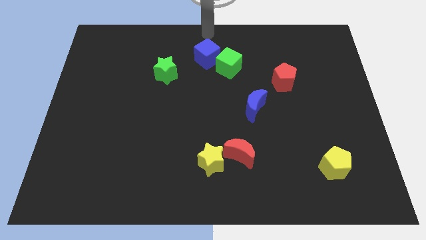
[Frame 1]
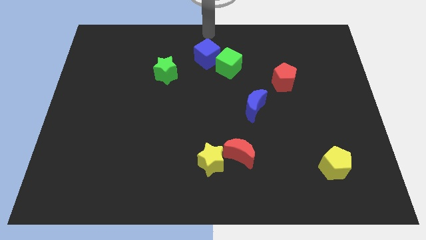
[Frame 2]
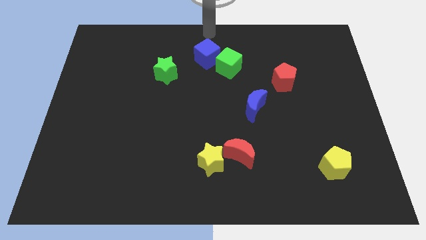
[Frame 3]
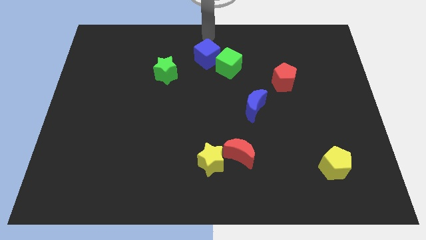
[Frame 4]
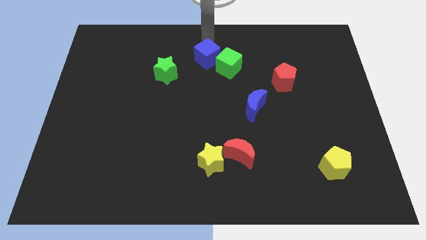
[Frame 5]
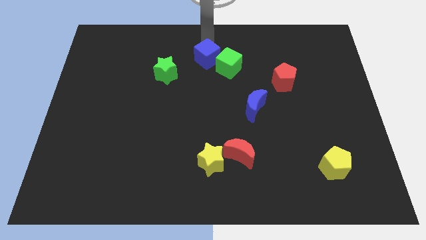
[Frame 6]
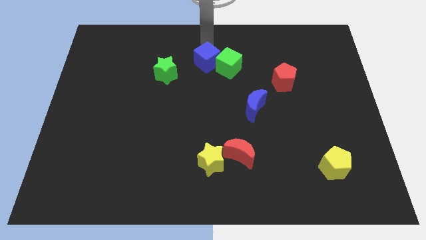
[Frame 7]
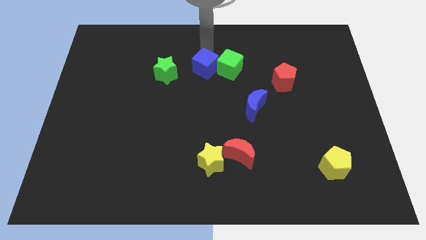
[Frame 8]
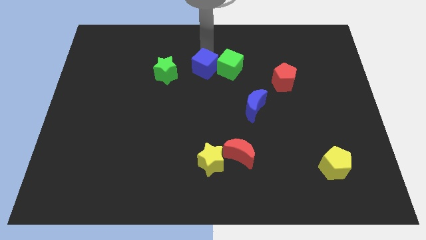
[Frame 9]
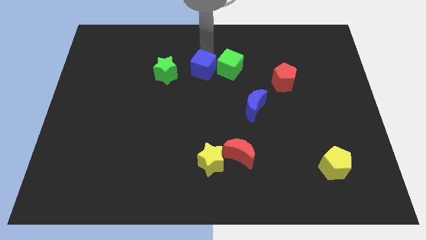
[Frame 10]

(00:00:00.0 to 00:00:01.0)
push blue cube slightly downwards

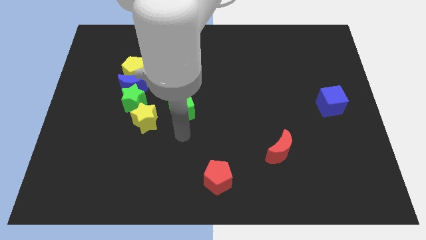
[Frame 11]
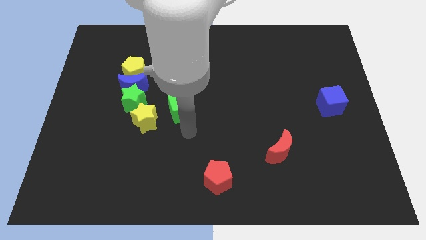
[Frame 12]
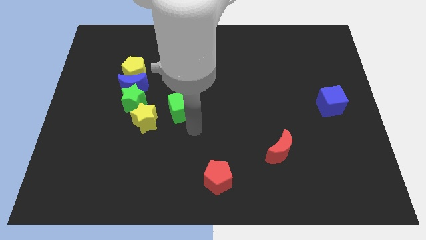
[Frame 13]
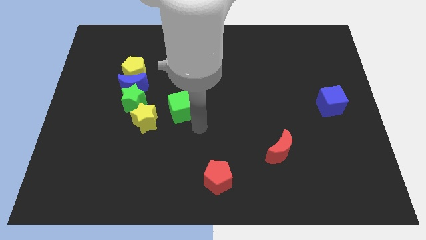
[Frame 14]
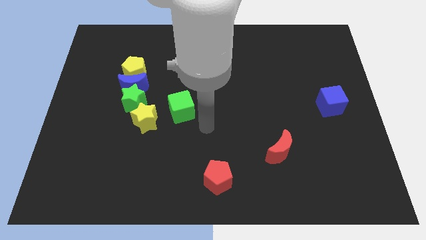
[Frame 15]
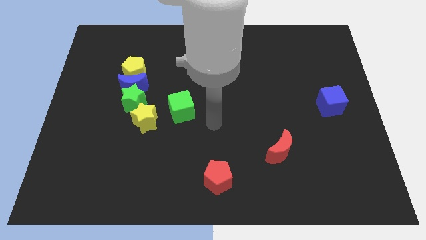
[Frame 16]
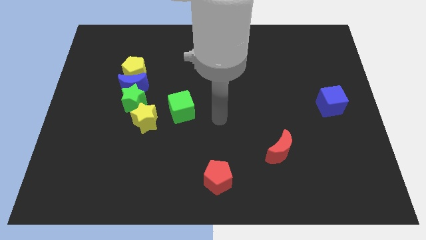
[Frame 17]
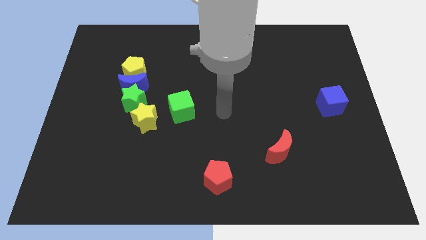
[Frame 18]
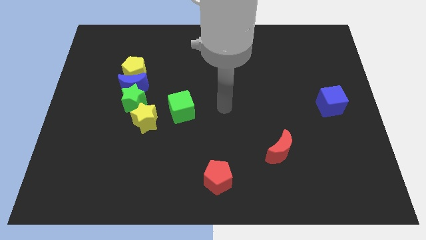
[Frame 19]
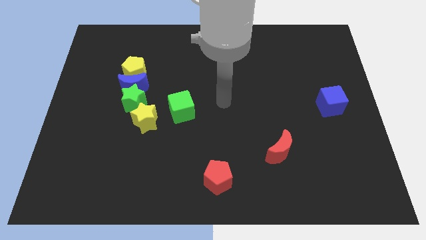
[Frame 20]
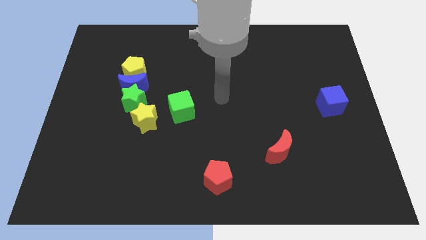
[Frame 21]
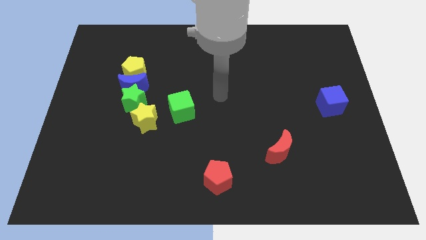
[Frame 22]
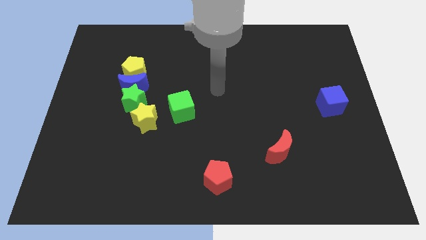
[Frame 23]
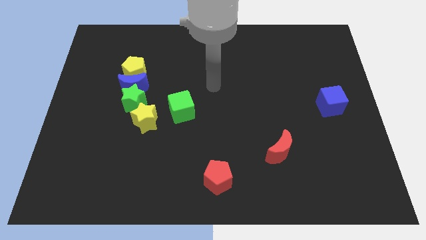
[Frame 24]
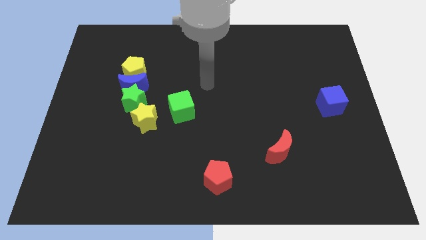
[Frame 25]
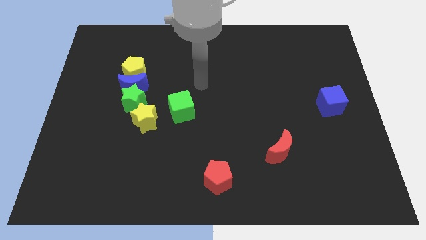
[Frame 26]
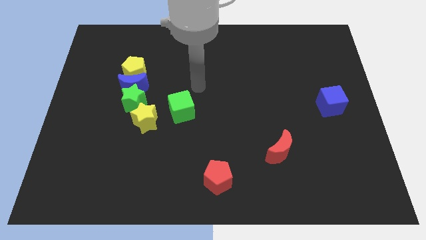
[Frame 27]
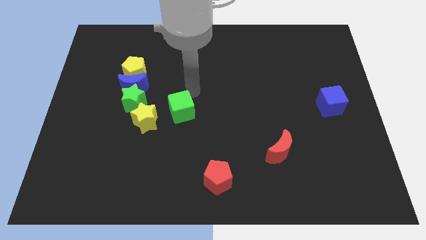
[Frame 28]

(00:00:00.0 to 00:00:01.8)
move your arm towards the green cube

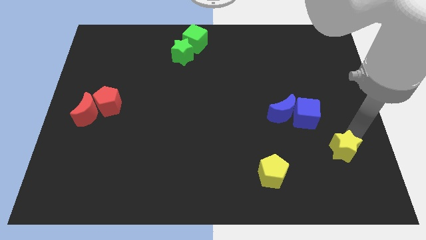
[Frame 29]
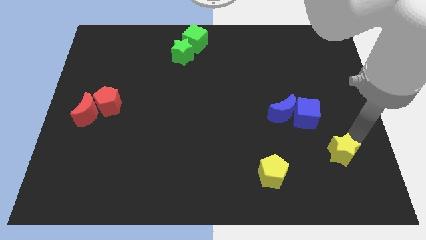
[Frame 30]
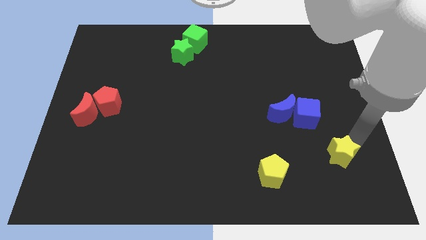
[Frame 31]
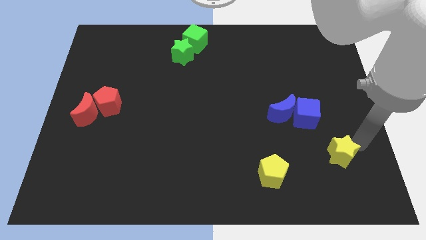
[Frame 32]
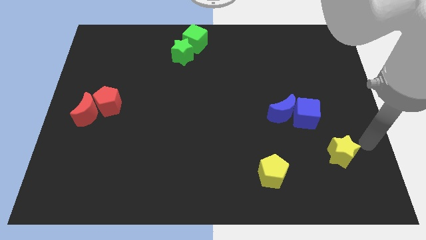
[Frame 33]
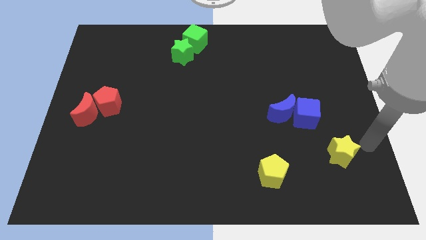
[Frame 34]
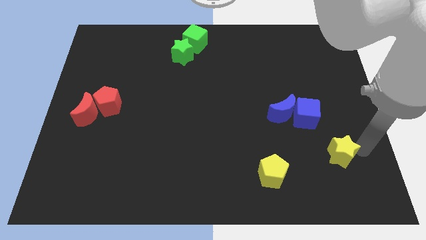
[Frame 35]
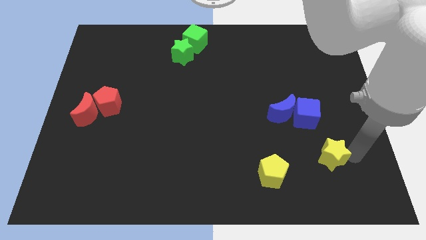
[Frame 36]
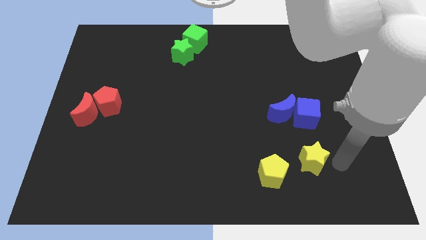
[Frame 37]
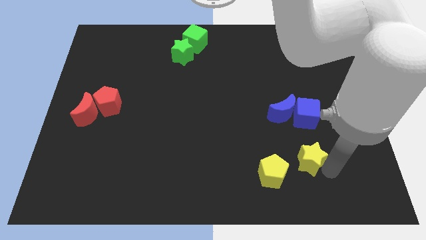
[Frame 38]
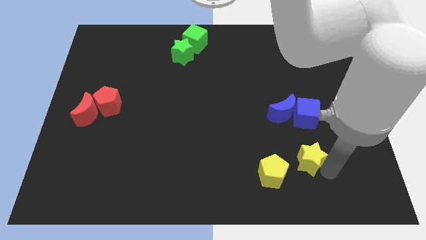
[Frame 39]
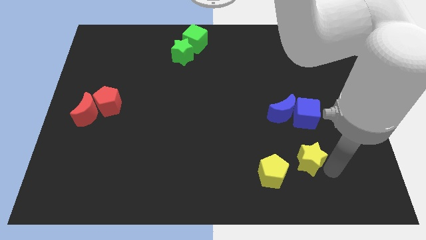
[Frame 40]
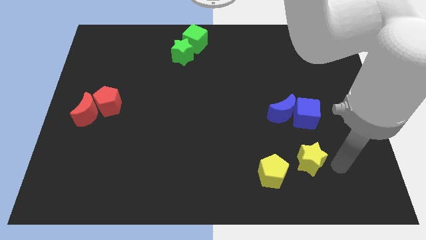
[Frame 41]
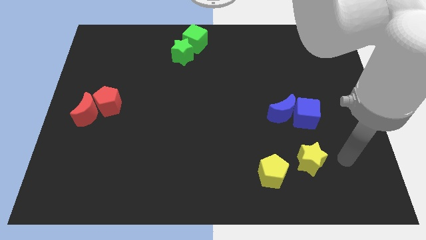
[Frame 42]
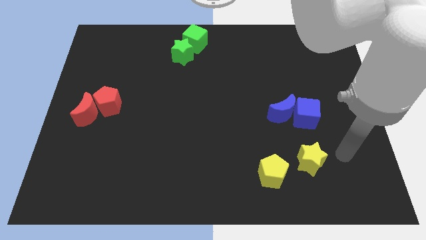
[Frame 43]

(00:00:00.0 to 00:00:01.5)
place the yellow star vertically below the blue cube

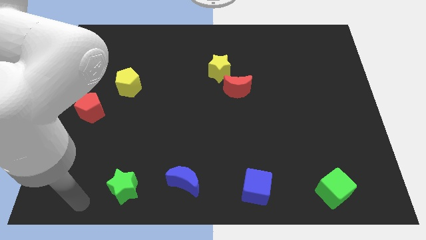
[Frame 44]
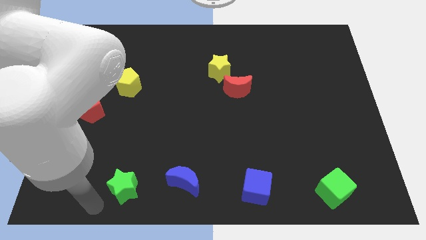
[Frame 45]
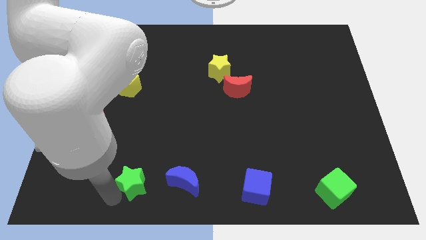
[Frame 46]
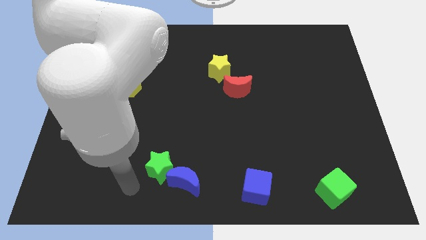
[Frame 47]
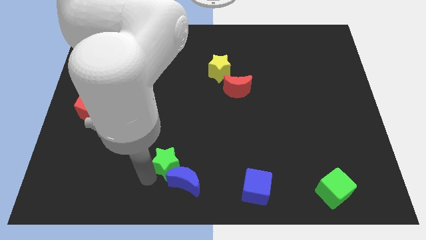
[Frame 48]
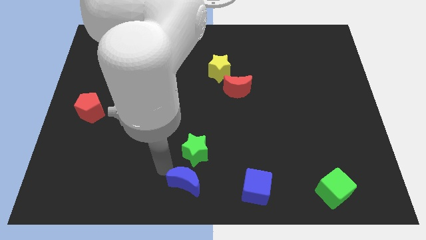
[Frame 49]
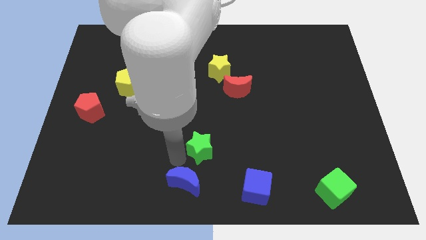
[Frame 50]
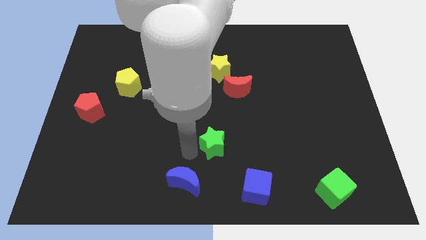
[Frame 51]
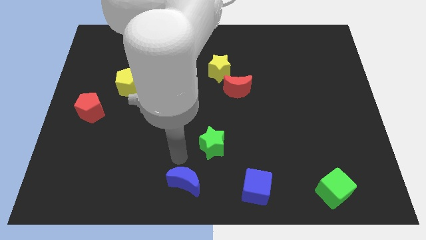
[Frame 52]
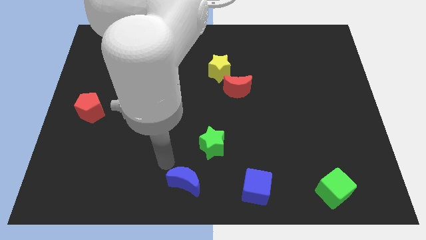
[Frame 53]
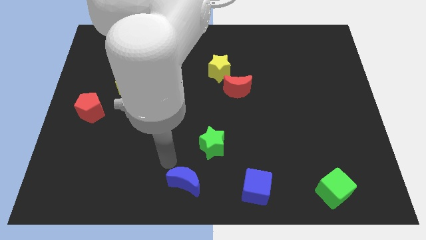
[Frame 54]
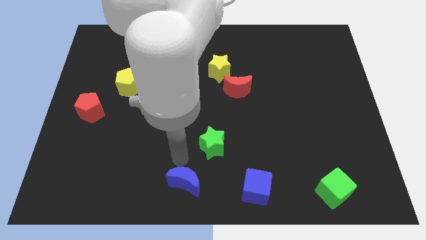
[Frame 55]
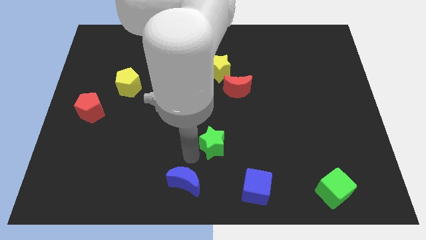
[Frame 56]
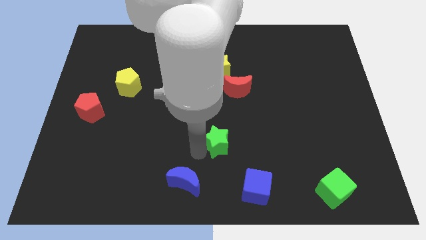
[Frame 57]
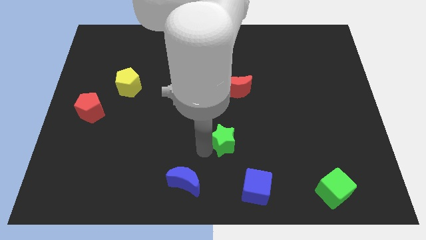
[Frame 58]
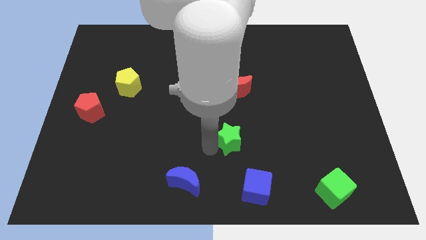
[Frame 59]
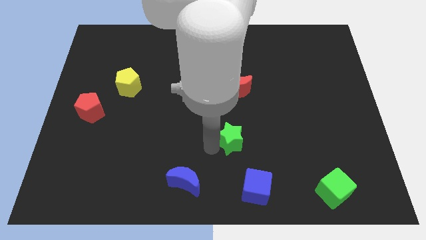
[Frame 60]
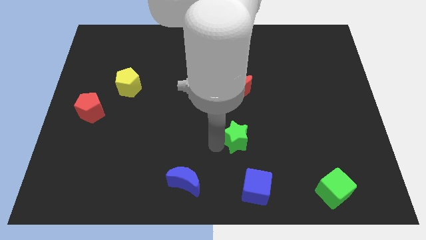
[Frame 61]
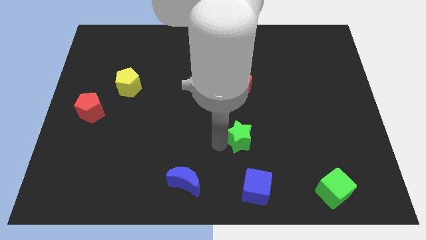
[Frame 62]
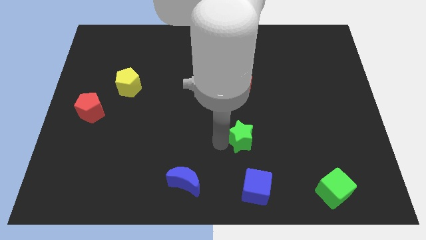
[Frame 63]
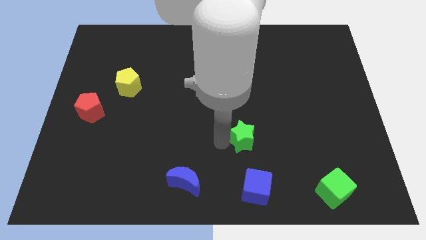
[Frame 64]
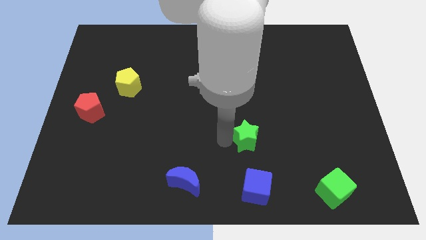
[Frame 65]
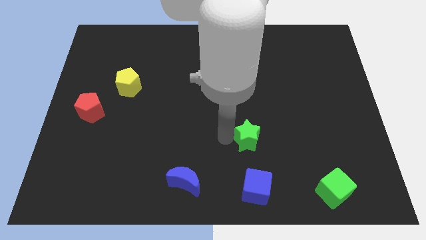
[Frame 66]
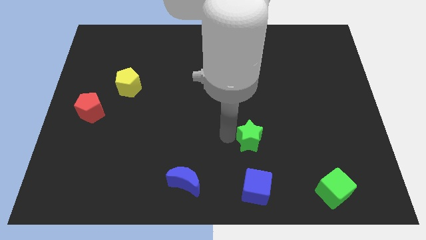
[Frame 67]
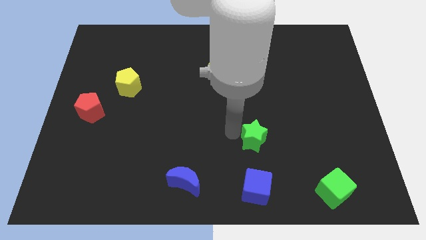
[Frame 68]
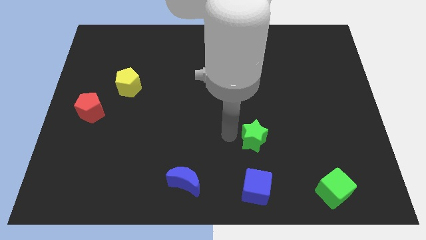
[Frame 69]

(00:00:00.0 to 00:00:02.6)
place the green star diagonal to the green cube

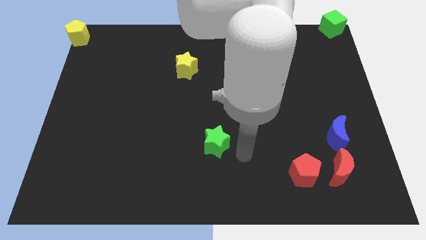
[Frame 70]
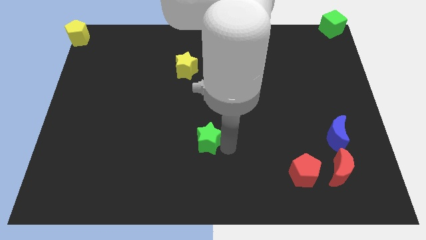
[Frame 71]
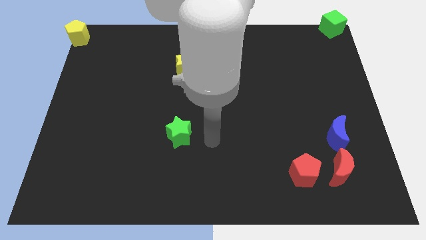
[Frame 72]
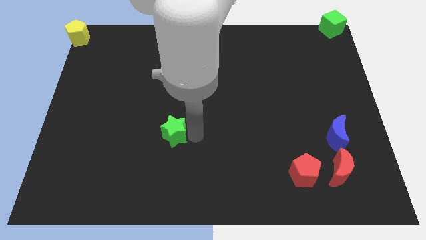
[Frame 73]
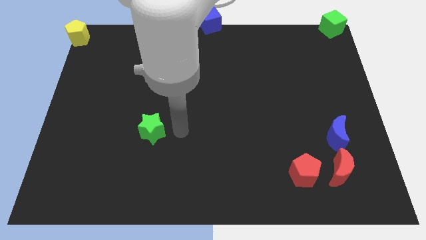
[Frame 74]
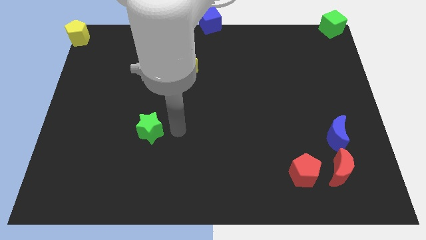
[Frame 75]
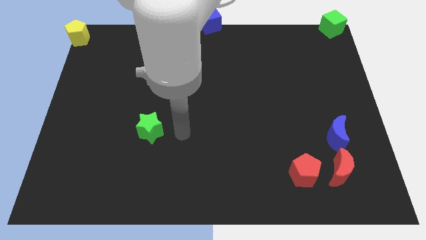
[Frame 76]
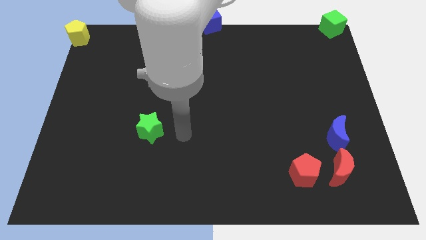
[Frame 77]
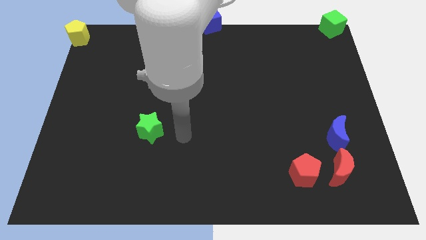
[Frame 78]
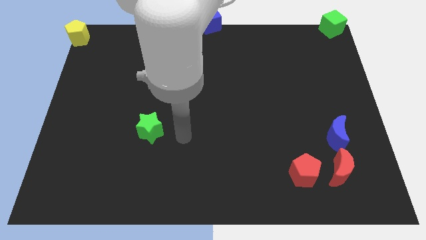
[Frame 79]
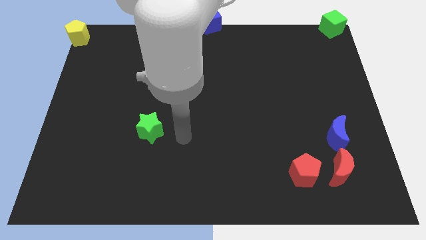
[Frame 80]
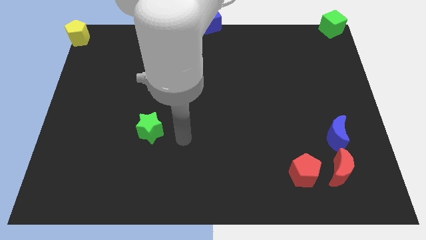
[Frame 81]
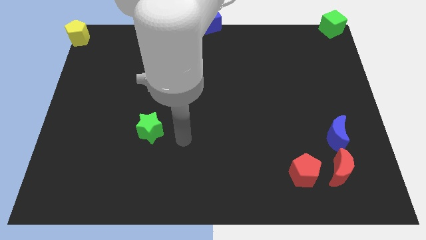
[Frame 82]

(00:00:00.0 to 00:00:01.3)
move green star slightly left

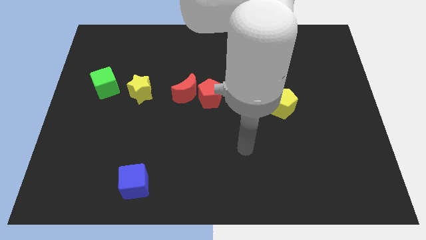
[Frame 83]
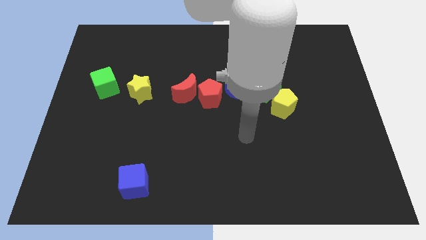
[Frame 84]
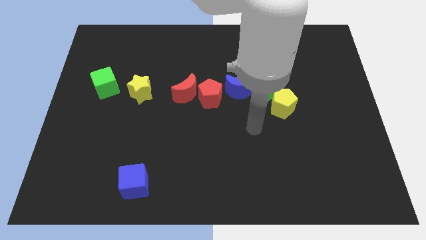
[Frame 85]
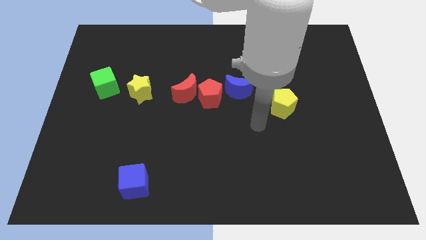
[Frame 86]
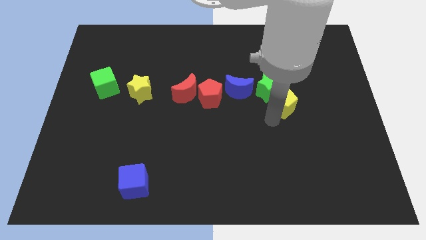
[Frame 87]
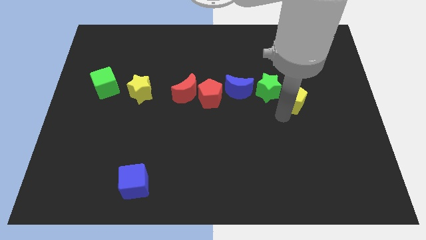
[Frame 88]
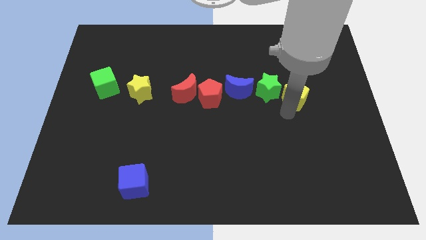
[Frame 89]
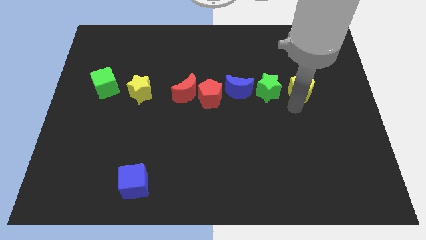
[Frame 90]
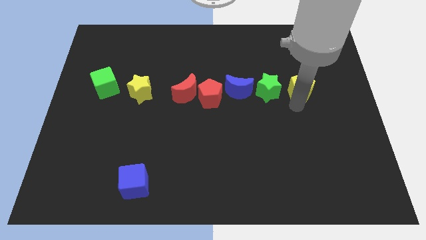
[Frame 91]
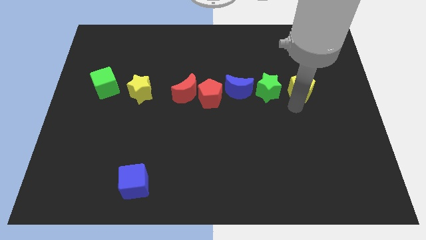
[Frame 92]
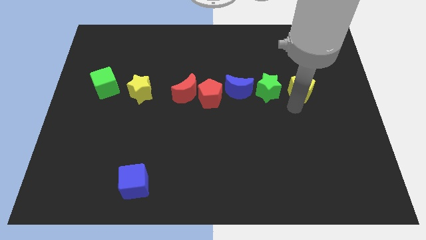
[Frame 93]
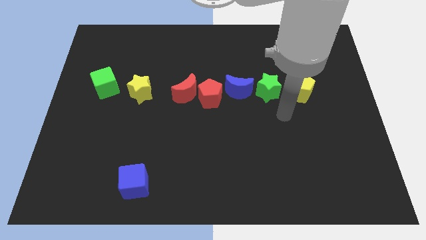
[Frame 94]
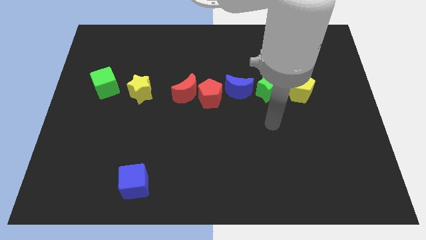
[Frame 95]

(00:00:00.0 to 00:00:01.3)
slide the yellow pentagon to the right of green star
